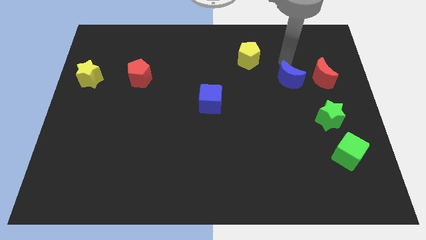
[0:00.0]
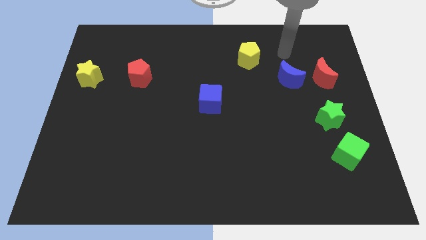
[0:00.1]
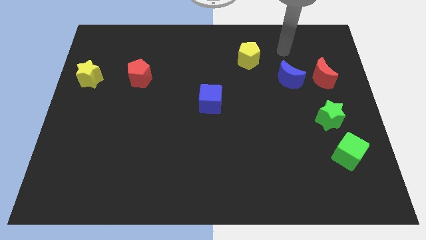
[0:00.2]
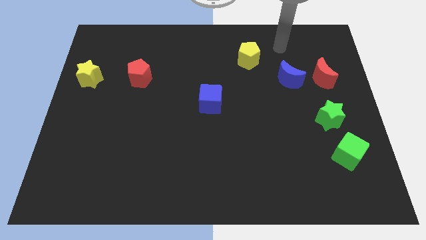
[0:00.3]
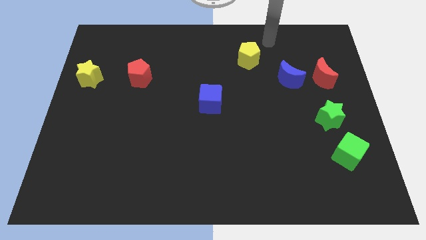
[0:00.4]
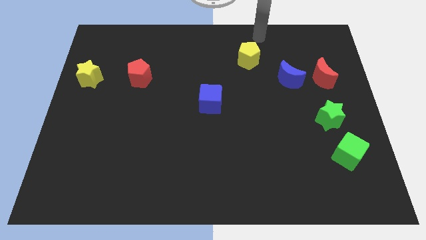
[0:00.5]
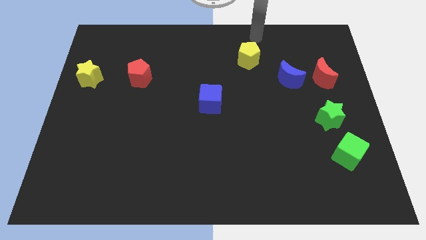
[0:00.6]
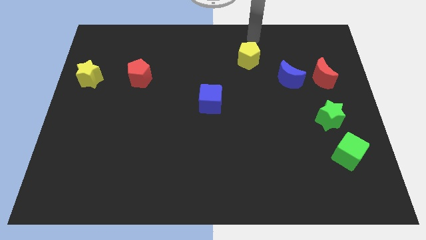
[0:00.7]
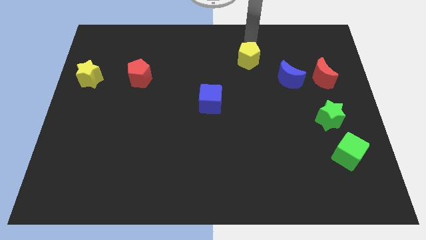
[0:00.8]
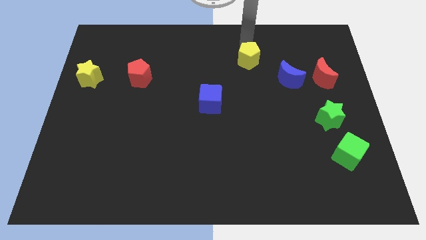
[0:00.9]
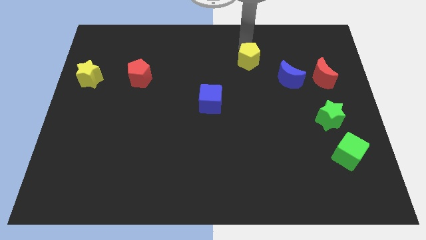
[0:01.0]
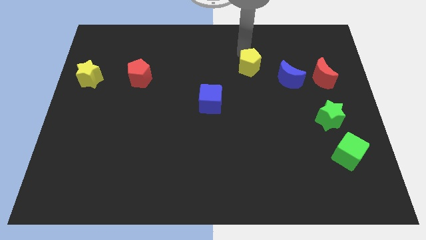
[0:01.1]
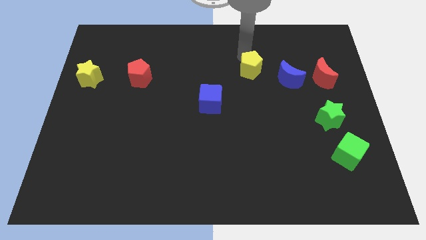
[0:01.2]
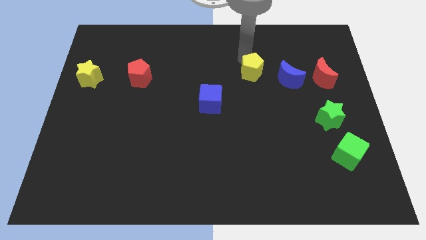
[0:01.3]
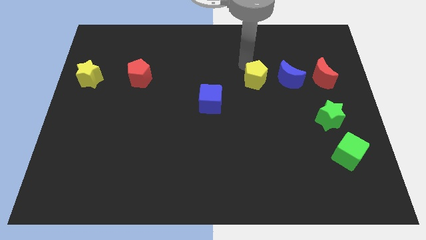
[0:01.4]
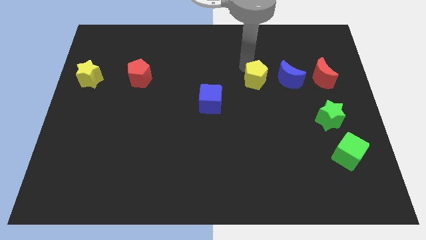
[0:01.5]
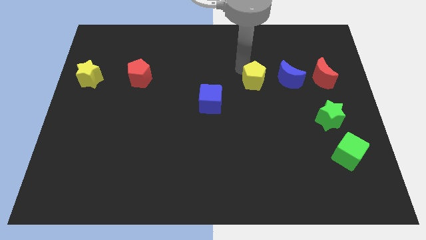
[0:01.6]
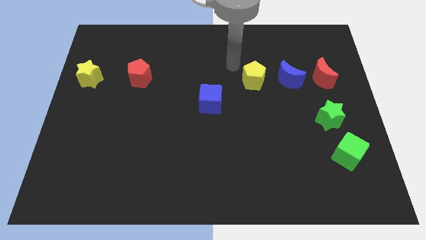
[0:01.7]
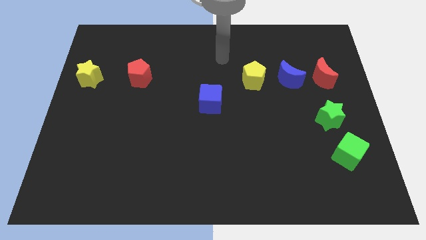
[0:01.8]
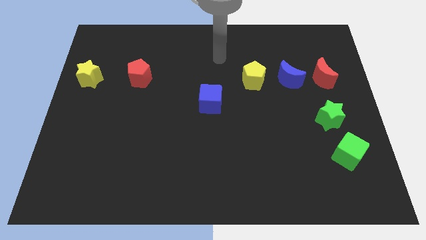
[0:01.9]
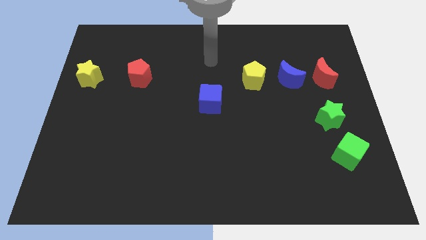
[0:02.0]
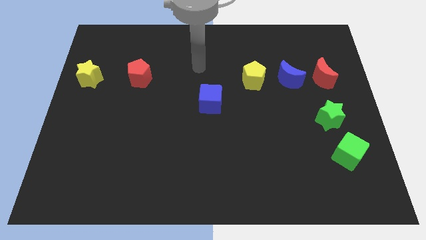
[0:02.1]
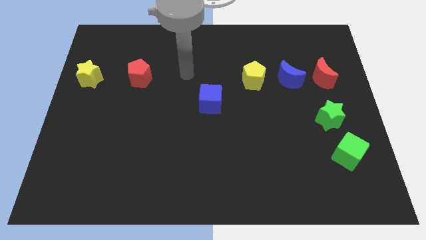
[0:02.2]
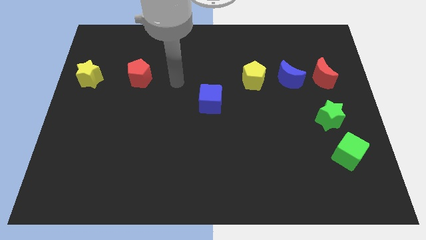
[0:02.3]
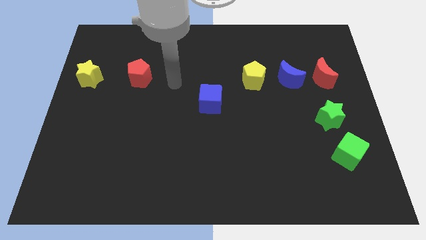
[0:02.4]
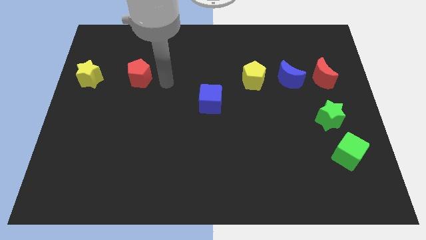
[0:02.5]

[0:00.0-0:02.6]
put the yellow pentagon to the left side of blue crescent

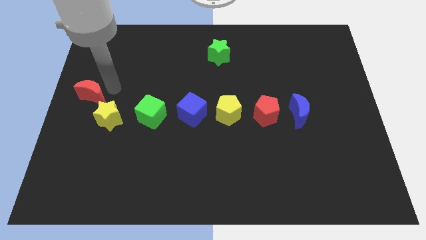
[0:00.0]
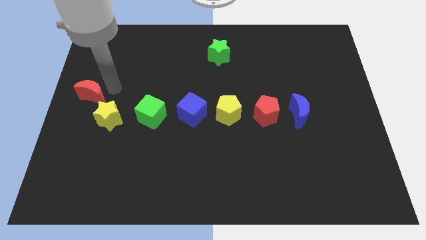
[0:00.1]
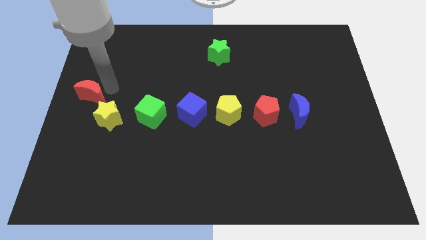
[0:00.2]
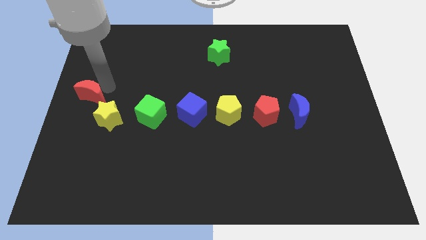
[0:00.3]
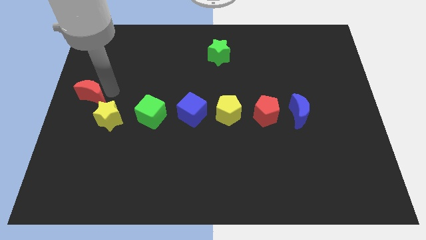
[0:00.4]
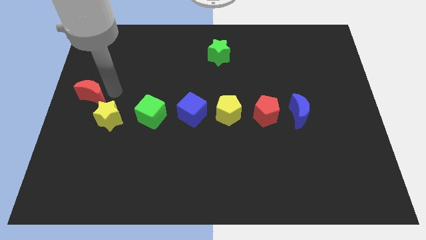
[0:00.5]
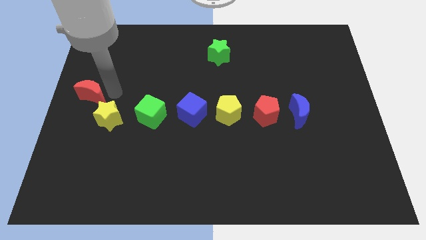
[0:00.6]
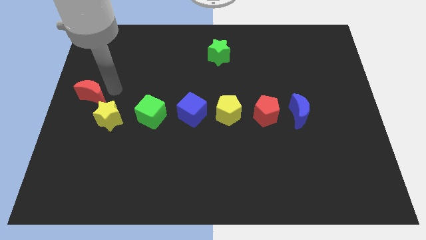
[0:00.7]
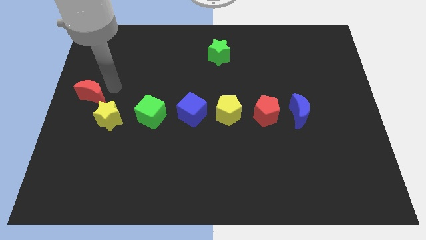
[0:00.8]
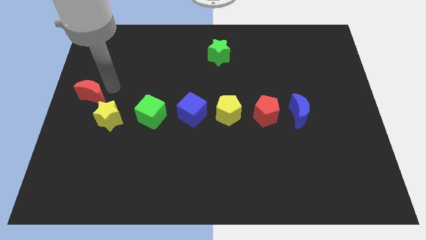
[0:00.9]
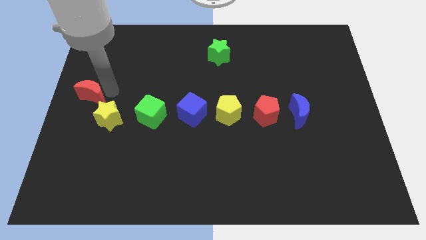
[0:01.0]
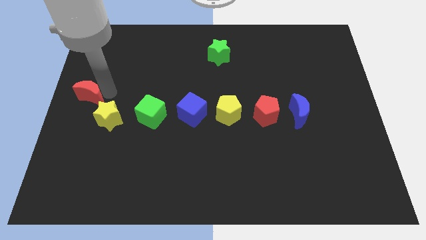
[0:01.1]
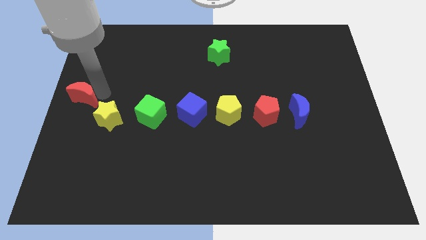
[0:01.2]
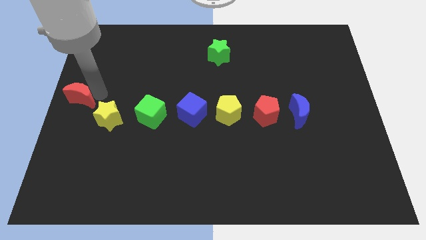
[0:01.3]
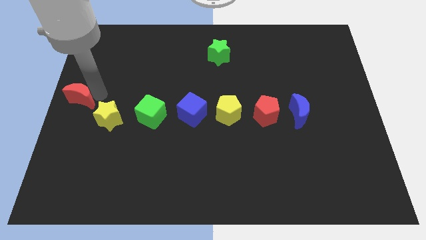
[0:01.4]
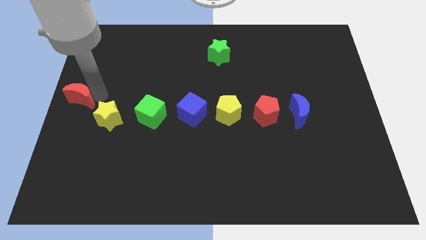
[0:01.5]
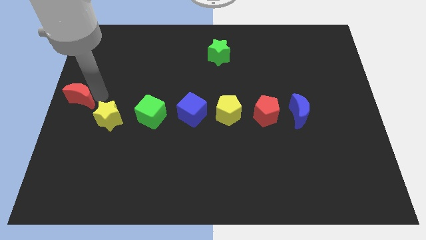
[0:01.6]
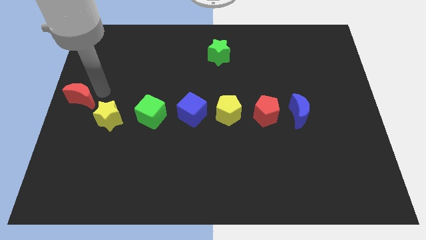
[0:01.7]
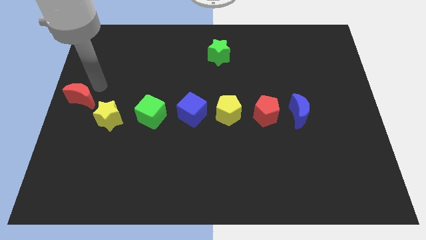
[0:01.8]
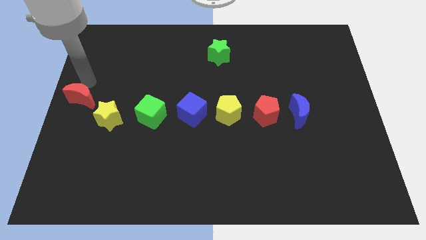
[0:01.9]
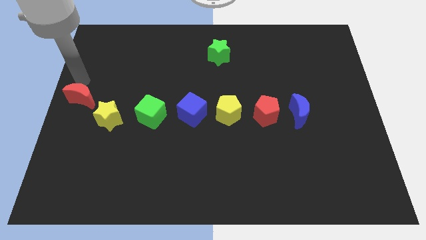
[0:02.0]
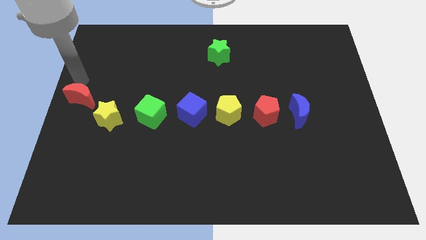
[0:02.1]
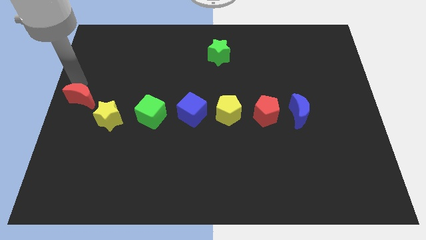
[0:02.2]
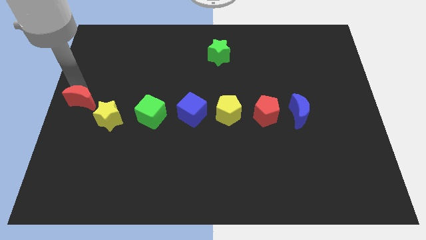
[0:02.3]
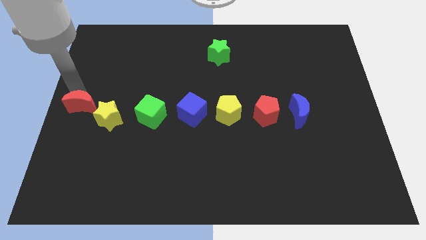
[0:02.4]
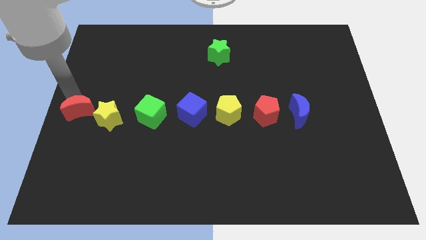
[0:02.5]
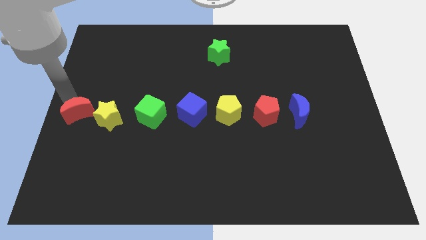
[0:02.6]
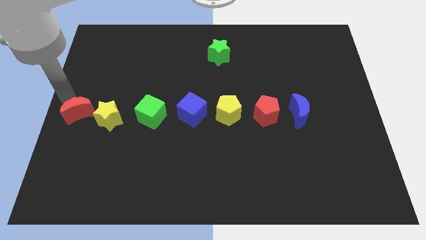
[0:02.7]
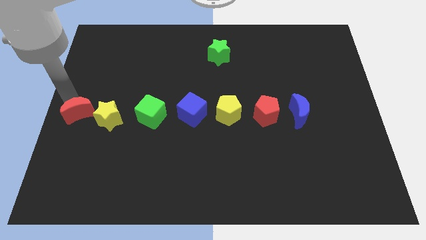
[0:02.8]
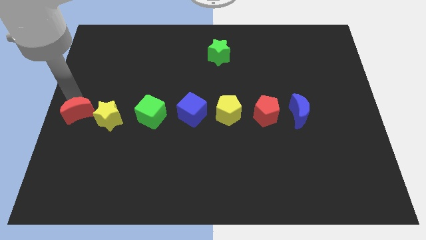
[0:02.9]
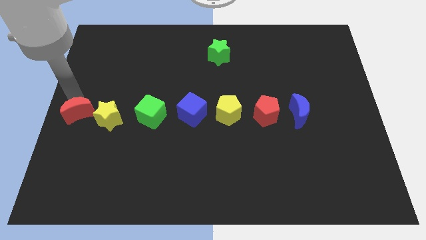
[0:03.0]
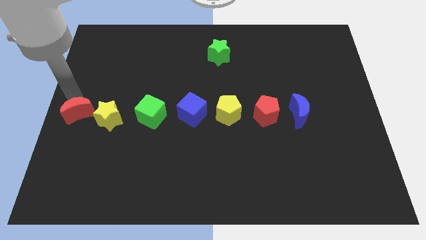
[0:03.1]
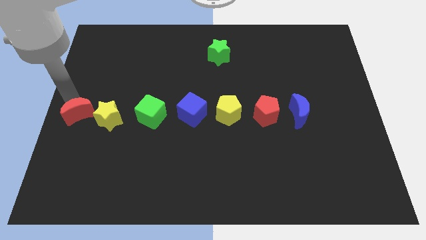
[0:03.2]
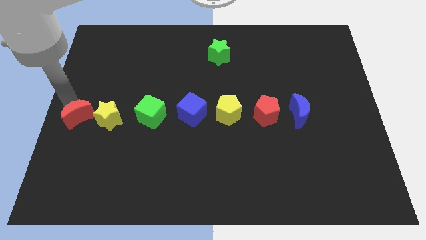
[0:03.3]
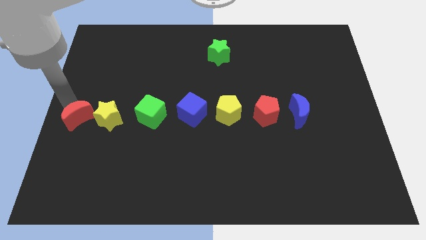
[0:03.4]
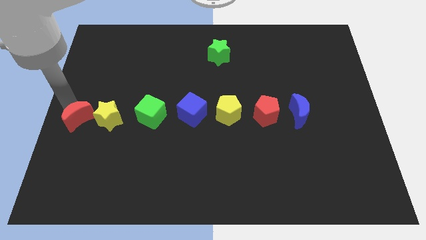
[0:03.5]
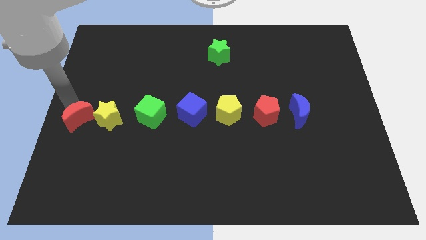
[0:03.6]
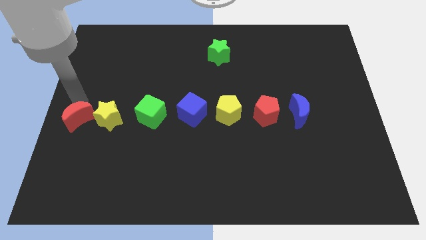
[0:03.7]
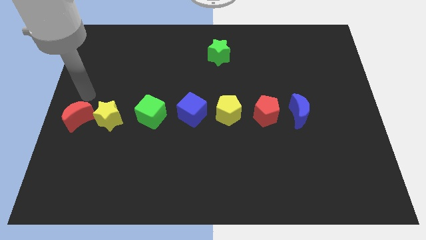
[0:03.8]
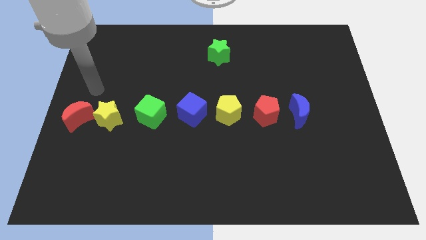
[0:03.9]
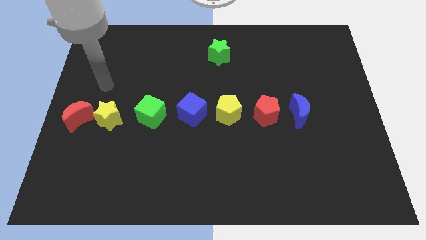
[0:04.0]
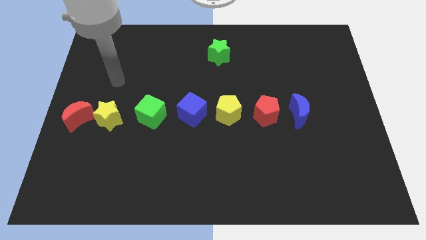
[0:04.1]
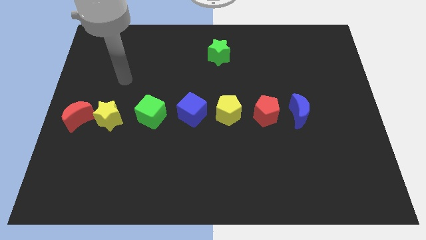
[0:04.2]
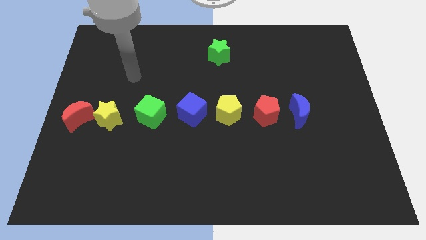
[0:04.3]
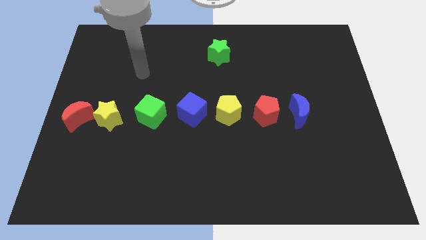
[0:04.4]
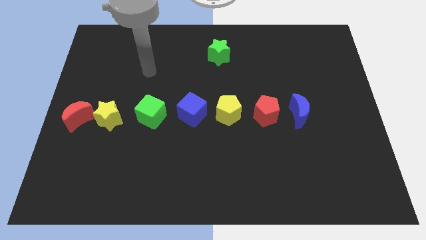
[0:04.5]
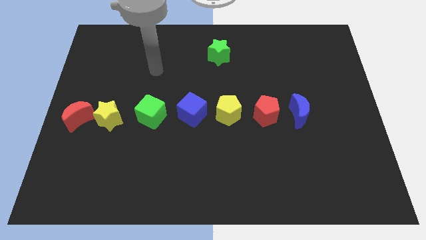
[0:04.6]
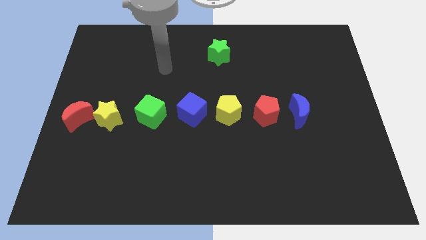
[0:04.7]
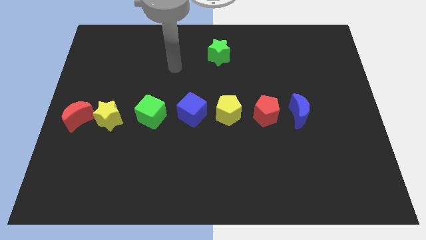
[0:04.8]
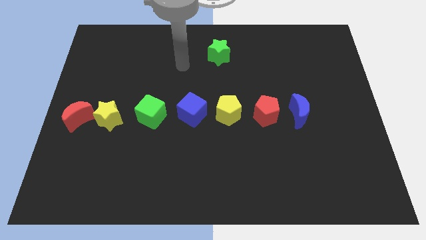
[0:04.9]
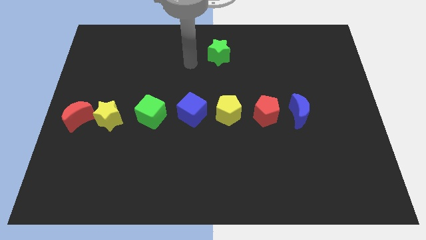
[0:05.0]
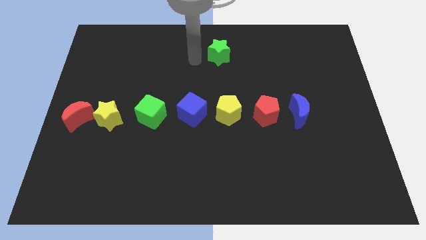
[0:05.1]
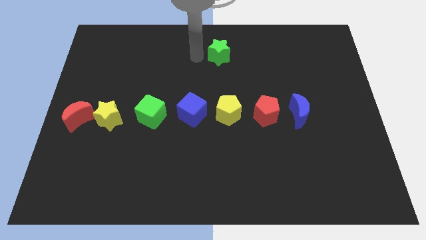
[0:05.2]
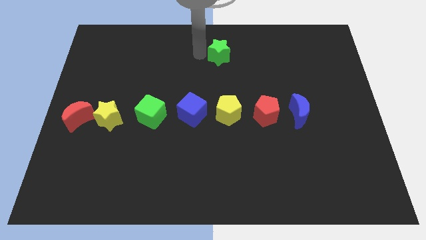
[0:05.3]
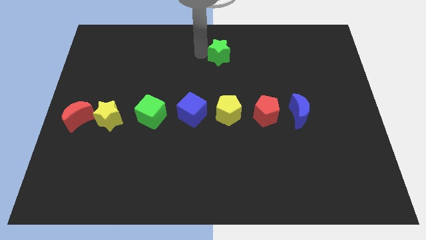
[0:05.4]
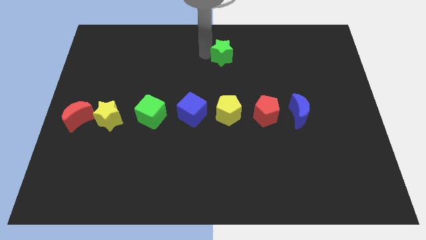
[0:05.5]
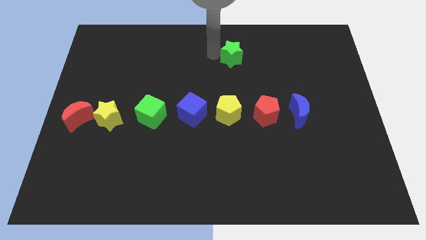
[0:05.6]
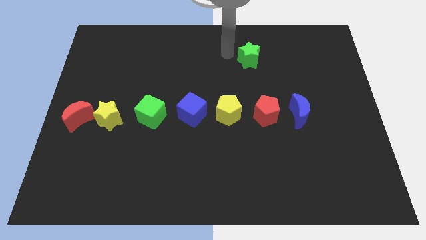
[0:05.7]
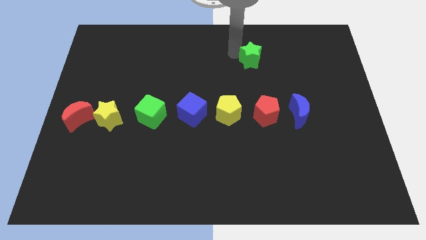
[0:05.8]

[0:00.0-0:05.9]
move the red crescent to the left side of the yellow star

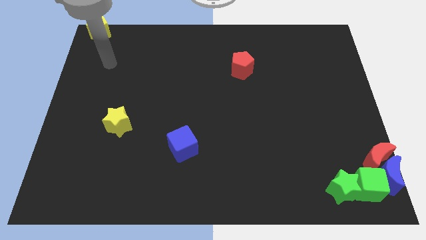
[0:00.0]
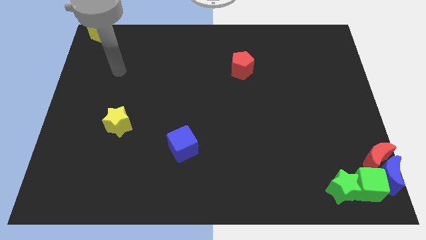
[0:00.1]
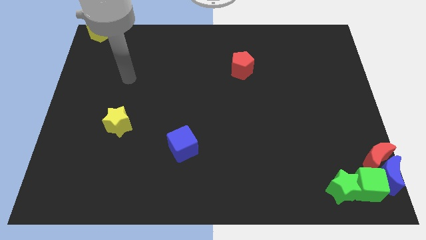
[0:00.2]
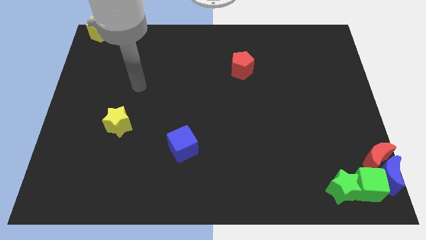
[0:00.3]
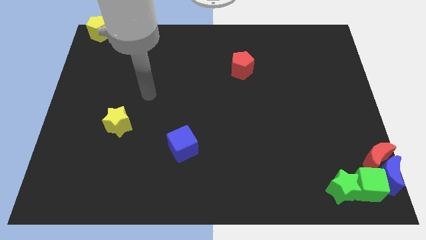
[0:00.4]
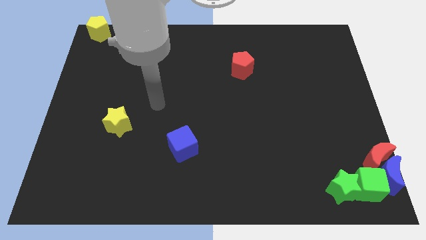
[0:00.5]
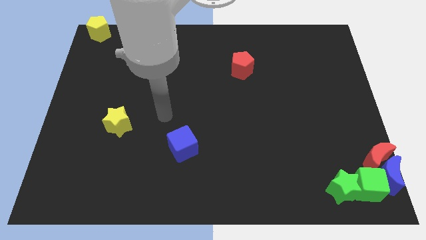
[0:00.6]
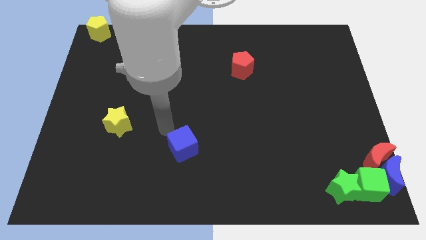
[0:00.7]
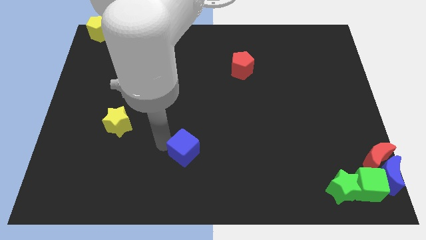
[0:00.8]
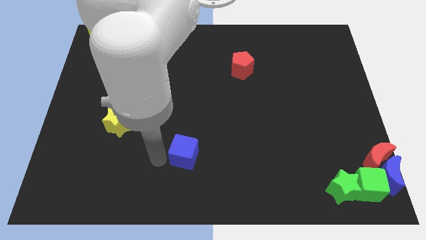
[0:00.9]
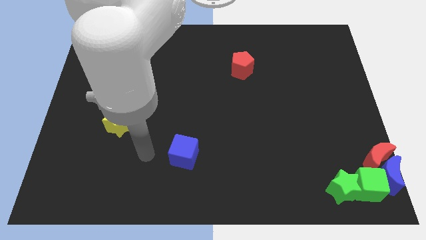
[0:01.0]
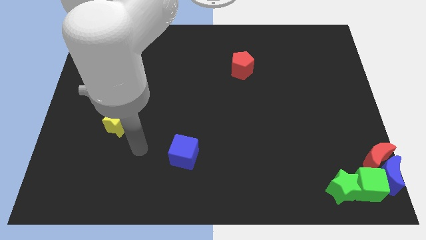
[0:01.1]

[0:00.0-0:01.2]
move the arm towards the left of the blue cube
